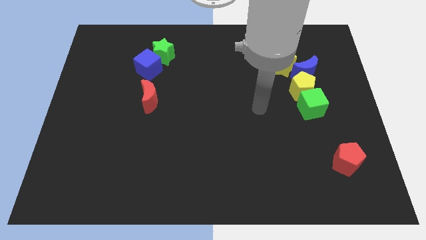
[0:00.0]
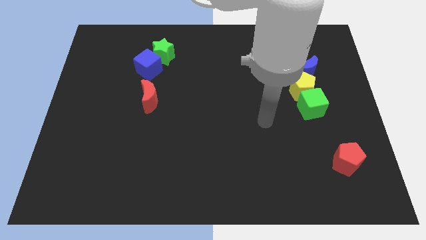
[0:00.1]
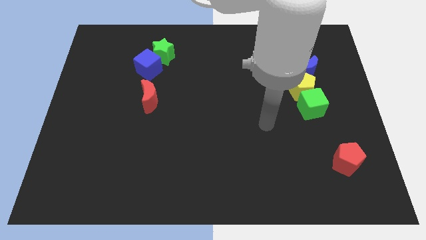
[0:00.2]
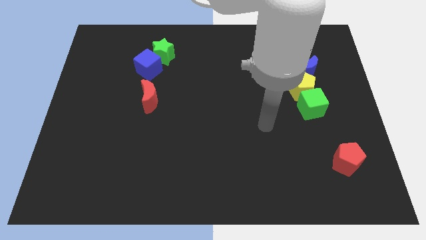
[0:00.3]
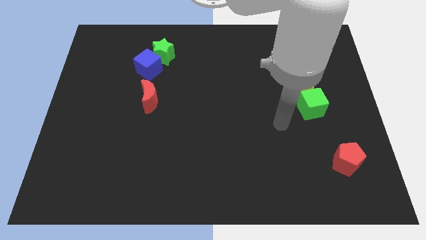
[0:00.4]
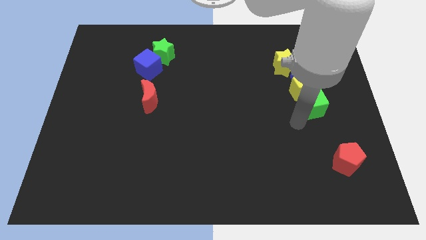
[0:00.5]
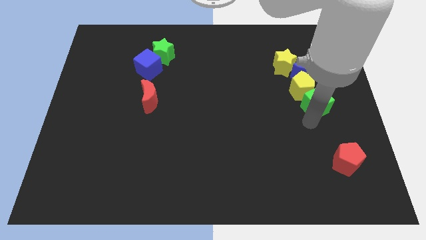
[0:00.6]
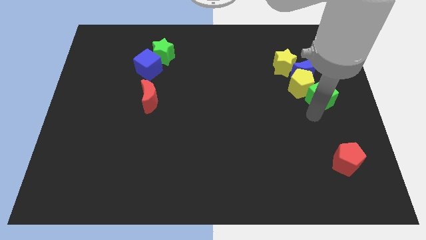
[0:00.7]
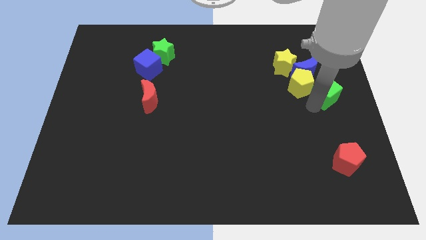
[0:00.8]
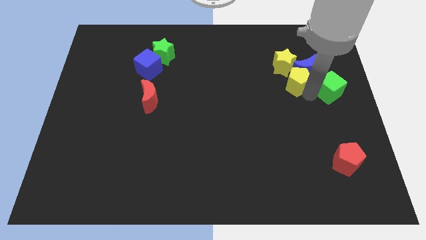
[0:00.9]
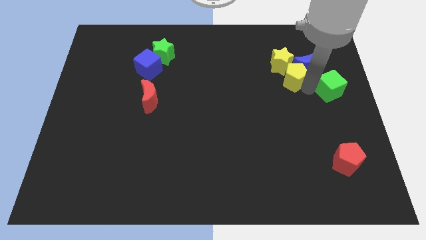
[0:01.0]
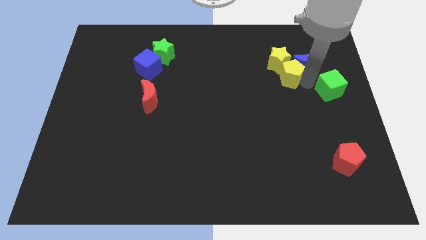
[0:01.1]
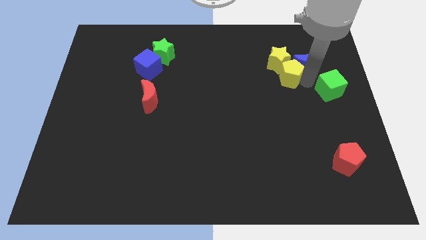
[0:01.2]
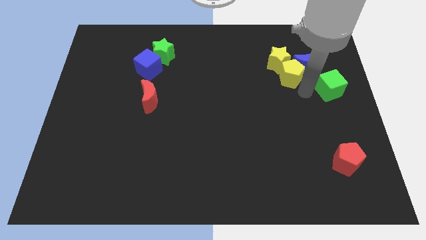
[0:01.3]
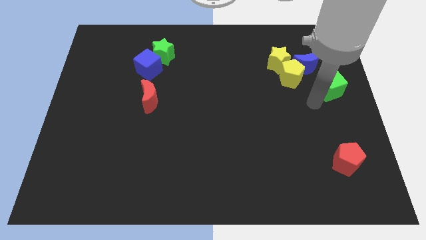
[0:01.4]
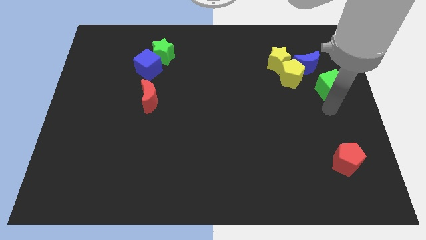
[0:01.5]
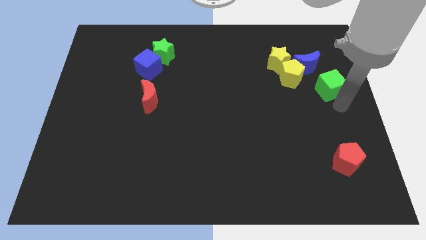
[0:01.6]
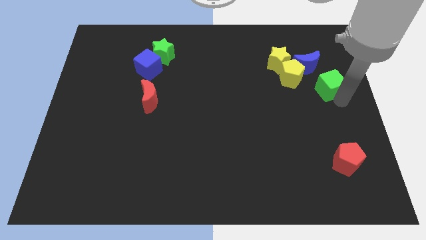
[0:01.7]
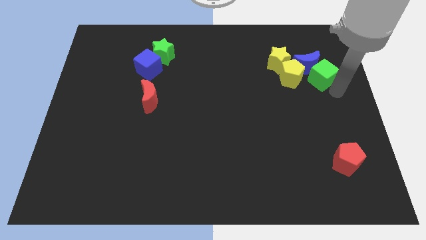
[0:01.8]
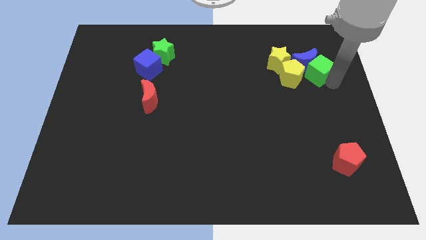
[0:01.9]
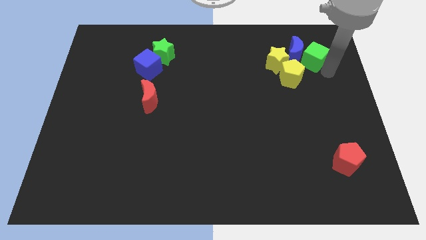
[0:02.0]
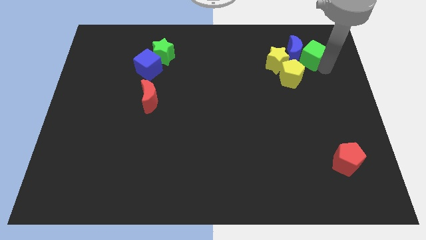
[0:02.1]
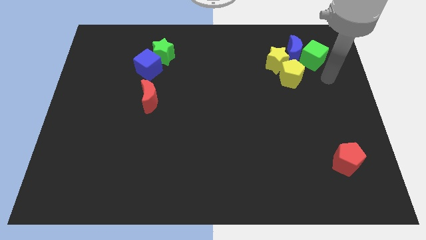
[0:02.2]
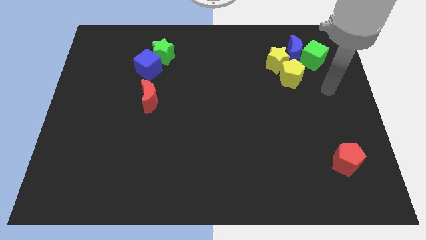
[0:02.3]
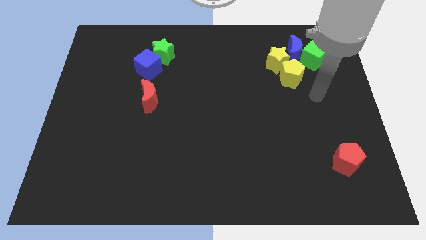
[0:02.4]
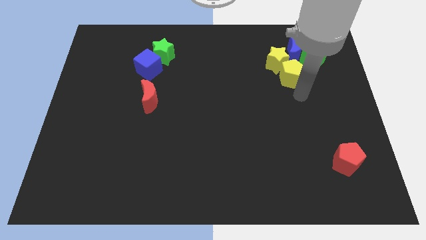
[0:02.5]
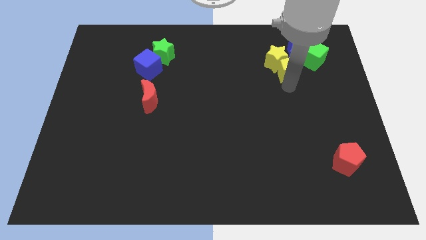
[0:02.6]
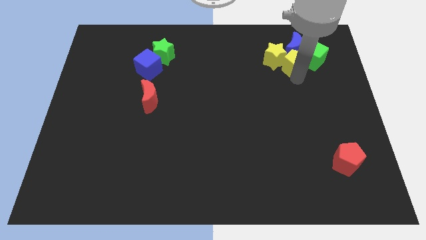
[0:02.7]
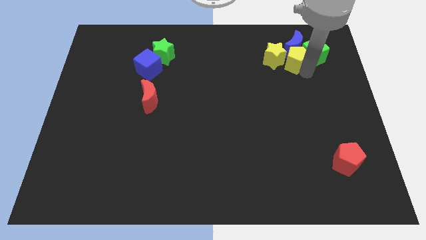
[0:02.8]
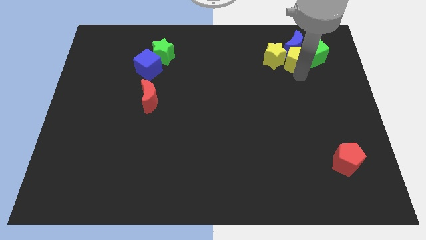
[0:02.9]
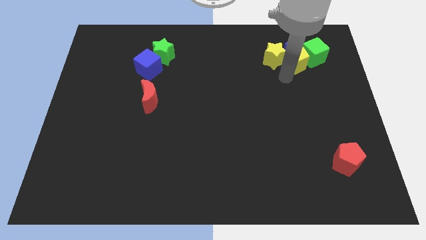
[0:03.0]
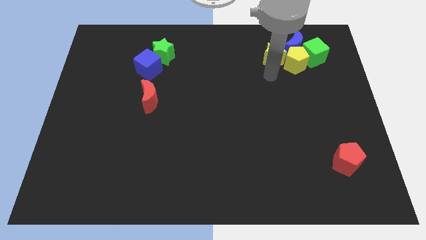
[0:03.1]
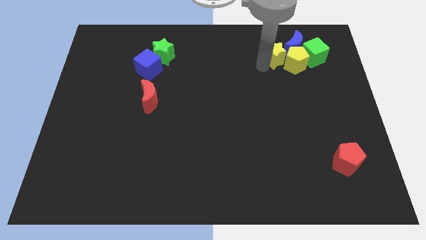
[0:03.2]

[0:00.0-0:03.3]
push the yellow pentagon into the blue crescent

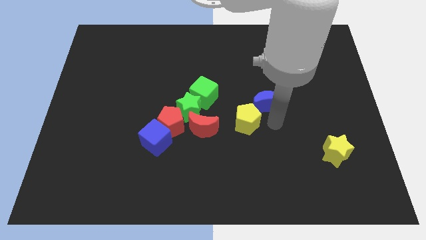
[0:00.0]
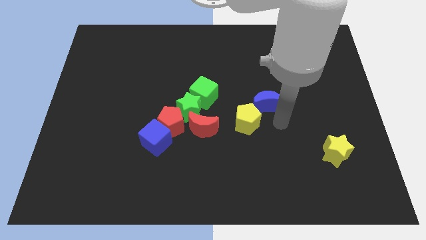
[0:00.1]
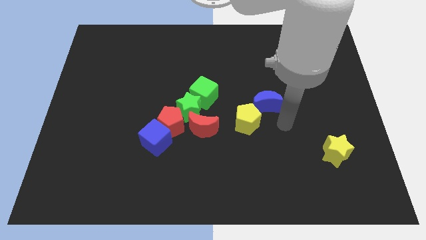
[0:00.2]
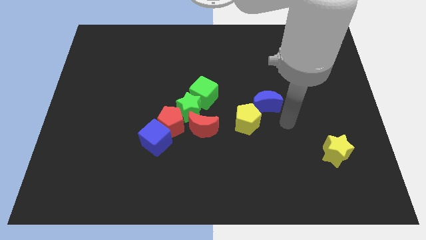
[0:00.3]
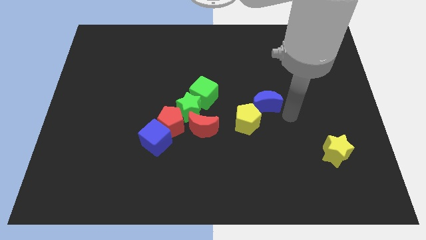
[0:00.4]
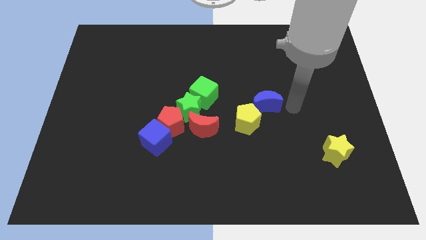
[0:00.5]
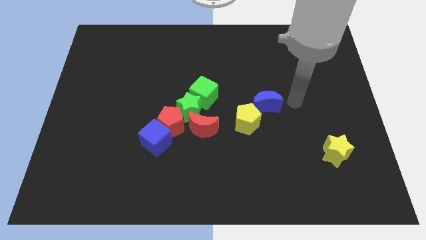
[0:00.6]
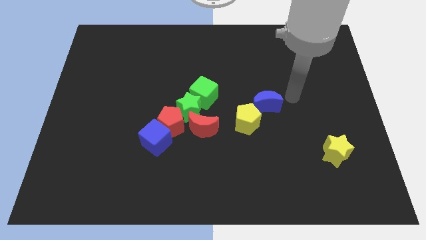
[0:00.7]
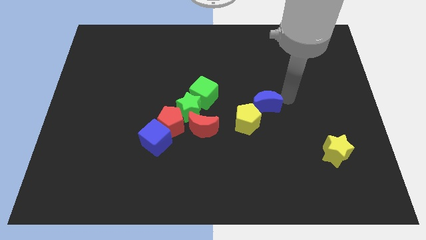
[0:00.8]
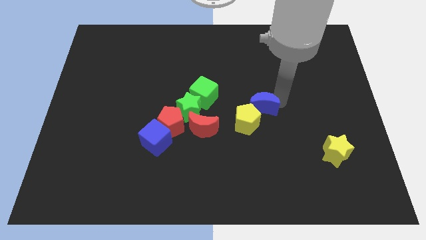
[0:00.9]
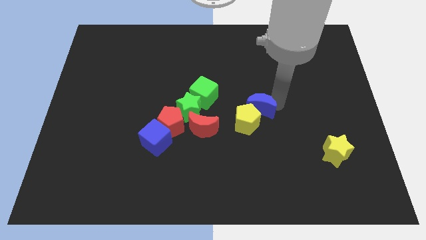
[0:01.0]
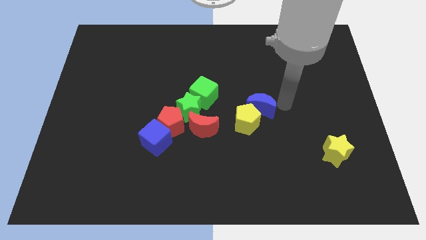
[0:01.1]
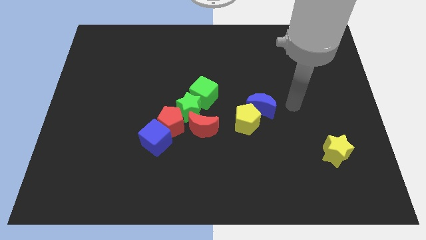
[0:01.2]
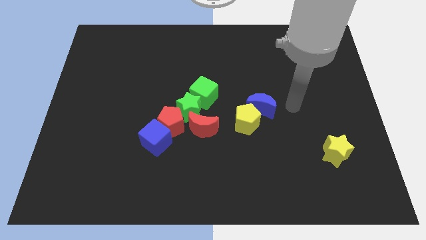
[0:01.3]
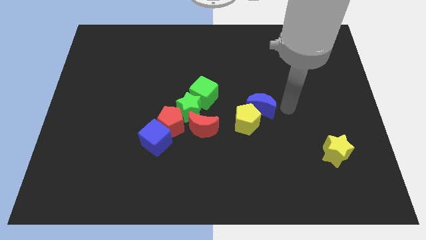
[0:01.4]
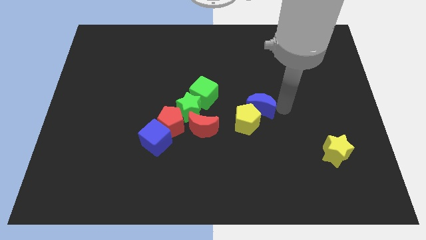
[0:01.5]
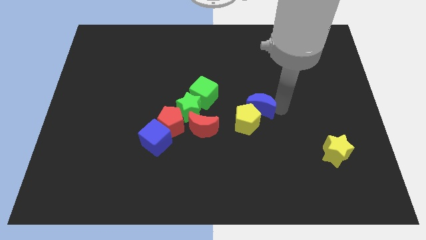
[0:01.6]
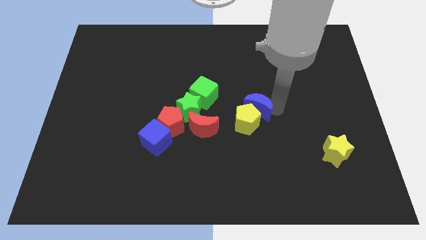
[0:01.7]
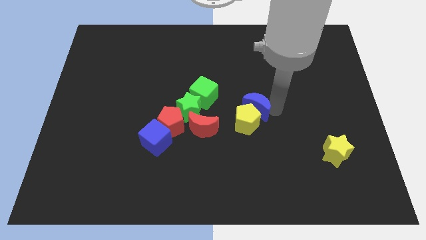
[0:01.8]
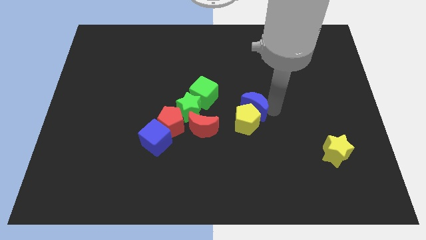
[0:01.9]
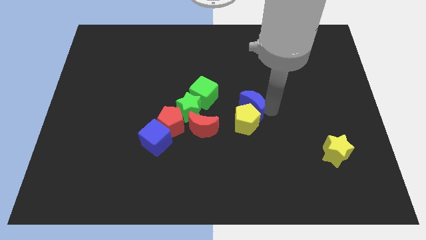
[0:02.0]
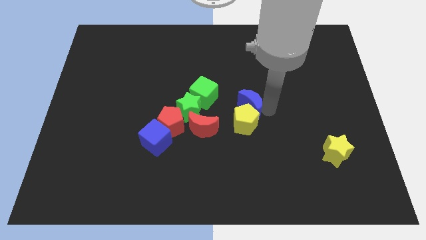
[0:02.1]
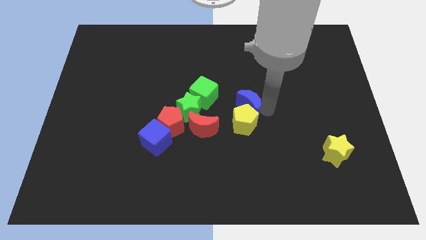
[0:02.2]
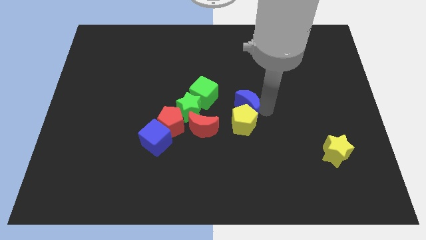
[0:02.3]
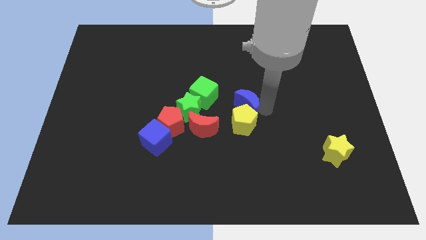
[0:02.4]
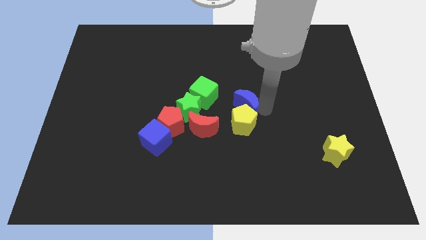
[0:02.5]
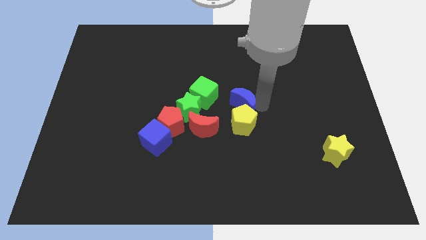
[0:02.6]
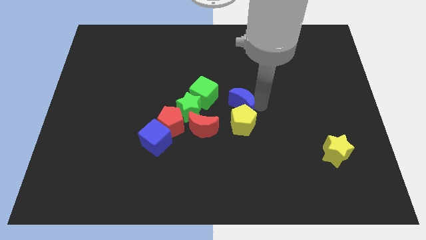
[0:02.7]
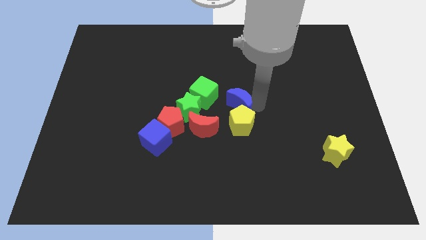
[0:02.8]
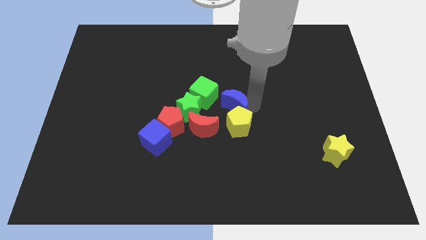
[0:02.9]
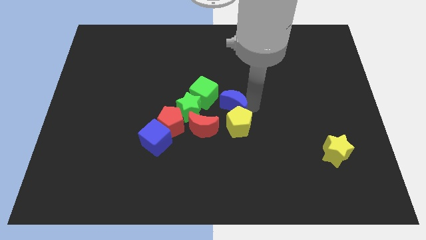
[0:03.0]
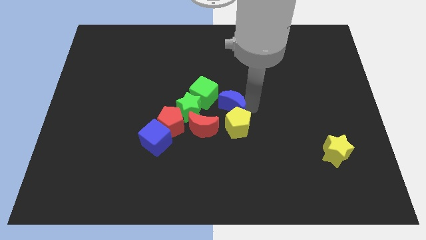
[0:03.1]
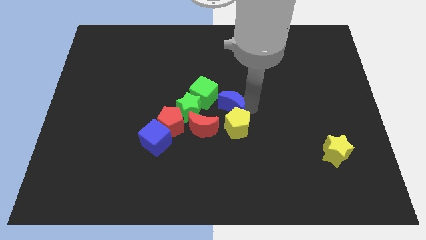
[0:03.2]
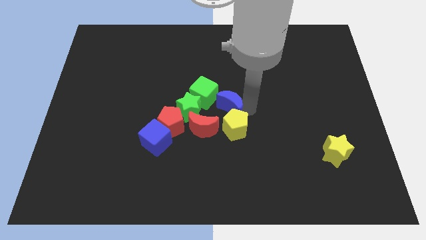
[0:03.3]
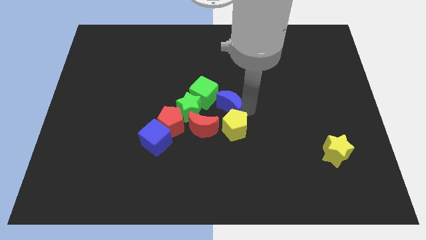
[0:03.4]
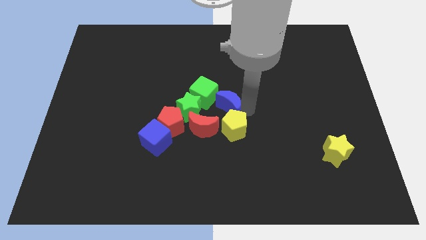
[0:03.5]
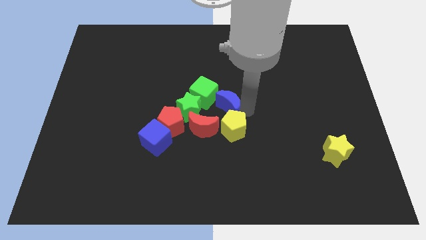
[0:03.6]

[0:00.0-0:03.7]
slide the blue moon and the yellow pentagon towards the center

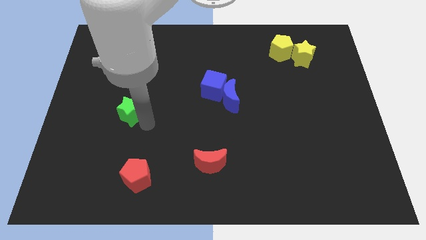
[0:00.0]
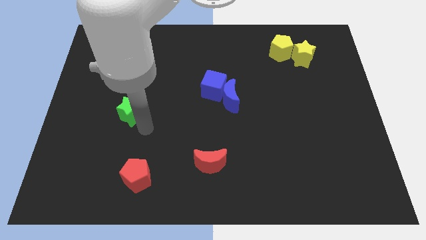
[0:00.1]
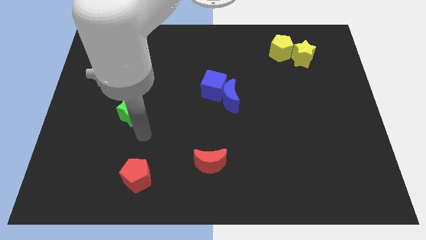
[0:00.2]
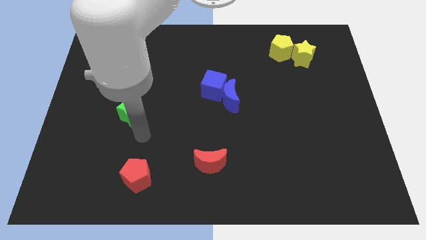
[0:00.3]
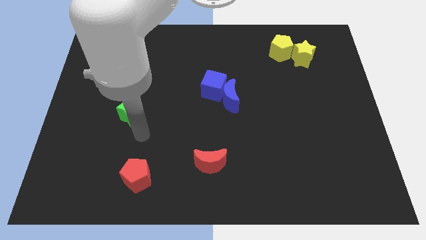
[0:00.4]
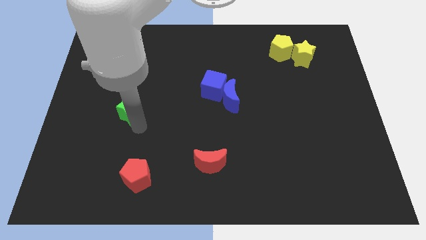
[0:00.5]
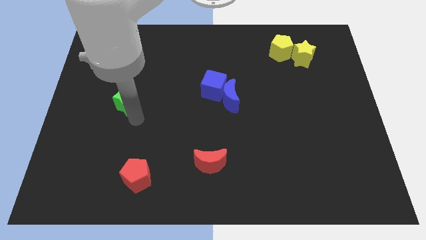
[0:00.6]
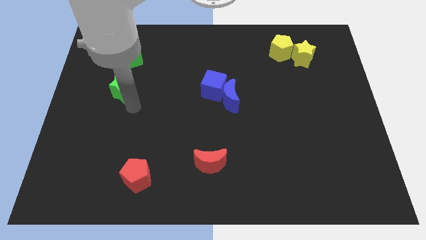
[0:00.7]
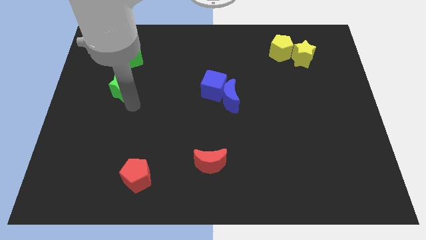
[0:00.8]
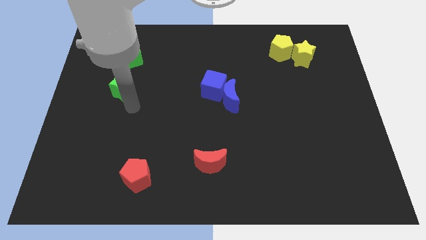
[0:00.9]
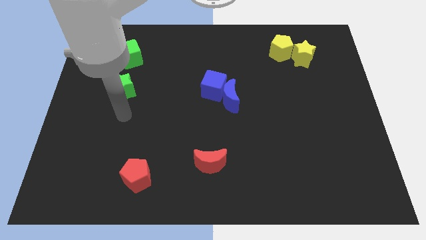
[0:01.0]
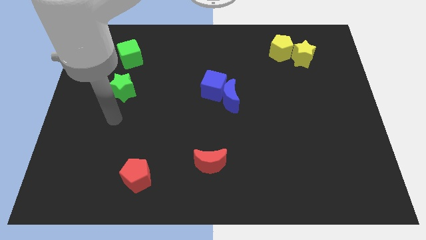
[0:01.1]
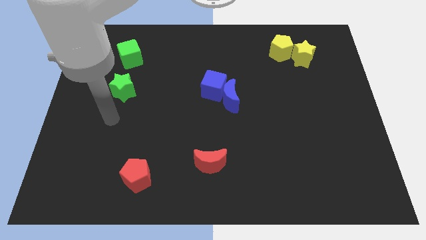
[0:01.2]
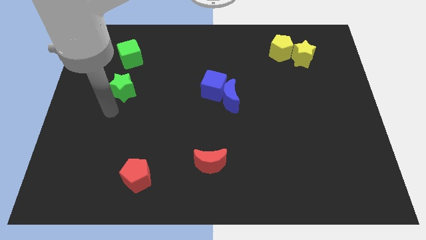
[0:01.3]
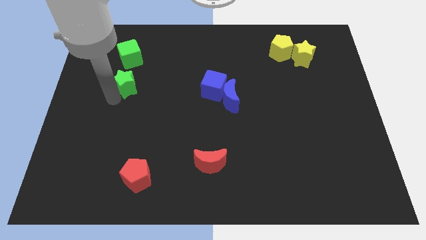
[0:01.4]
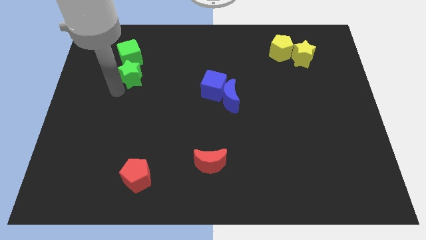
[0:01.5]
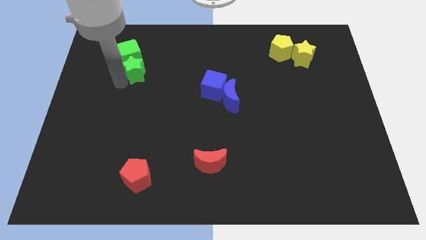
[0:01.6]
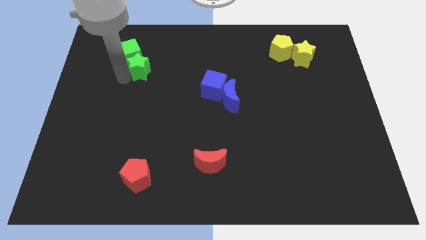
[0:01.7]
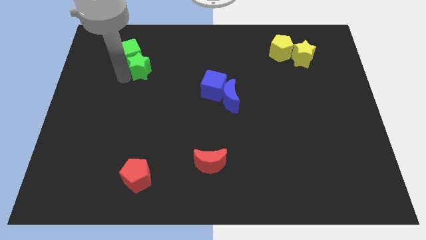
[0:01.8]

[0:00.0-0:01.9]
move the green star below to the green cube

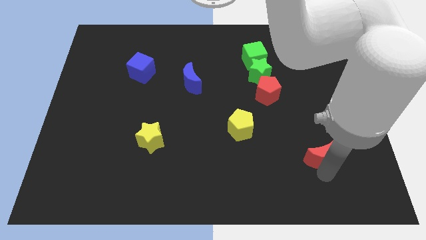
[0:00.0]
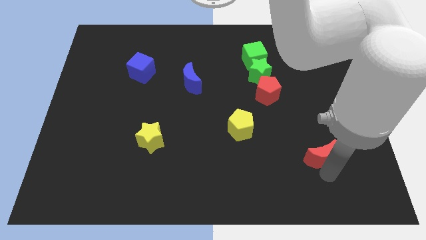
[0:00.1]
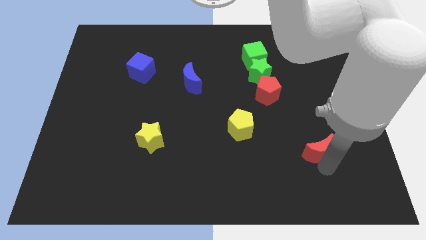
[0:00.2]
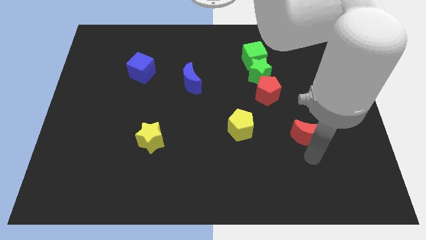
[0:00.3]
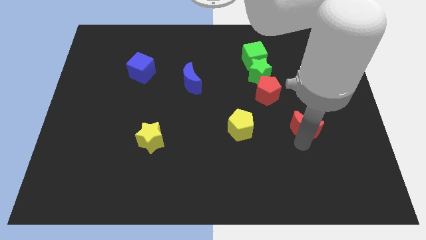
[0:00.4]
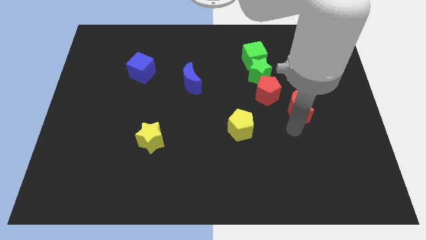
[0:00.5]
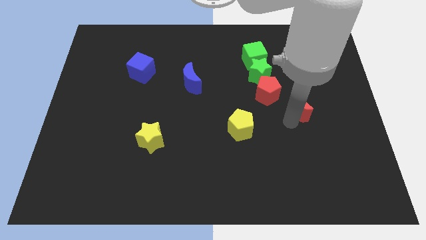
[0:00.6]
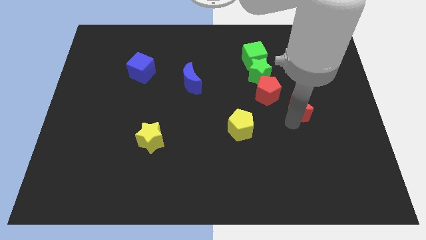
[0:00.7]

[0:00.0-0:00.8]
move red moon slightly up
